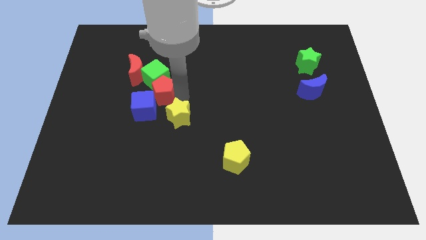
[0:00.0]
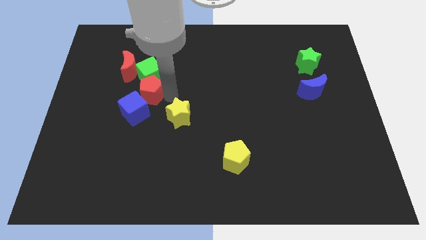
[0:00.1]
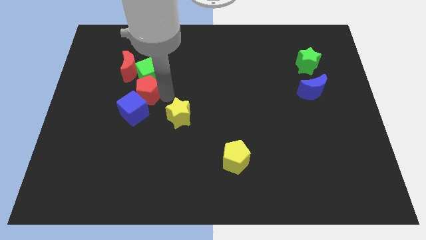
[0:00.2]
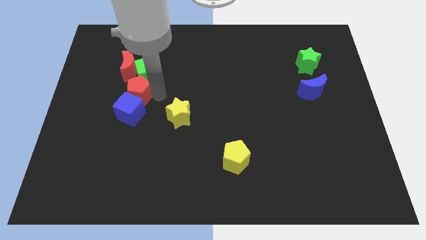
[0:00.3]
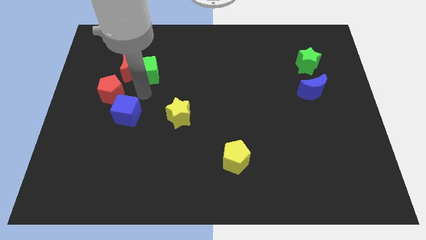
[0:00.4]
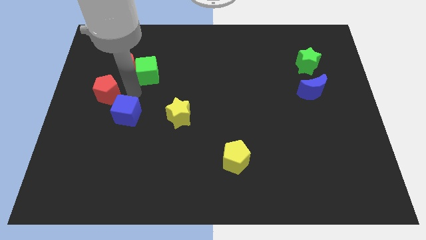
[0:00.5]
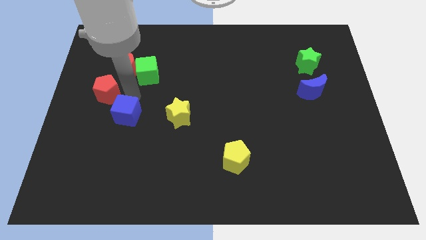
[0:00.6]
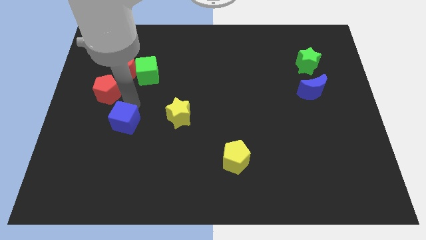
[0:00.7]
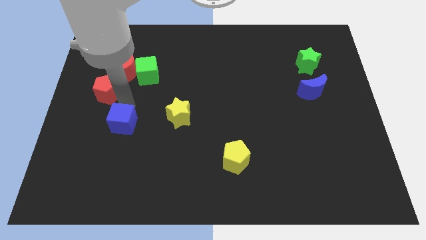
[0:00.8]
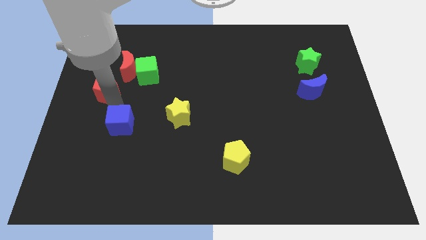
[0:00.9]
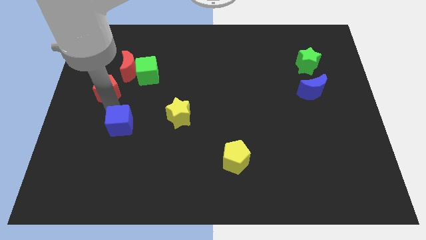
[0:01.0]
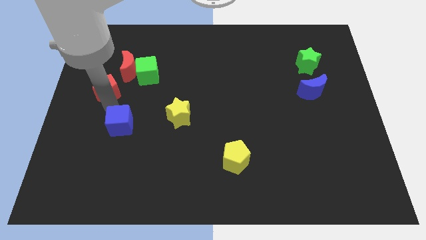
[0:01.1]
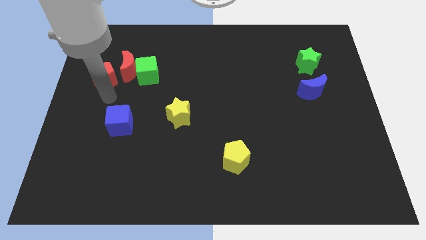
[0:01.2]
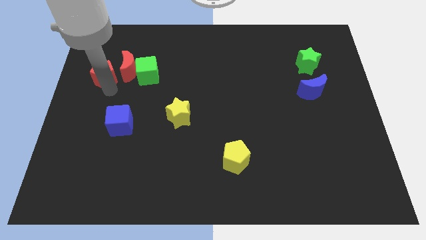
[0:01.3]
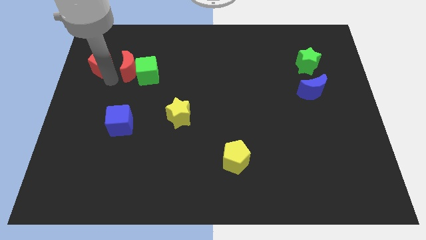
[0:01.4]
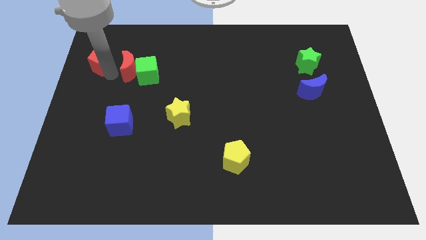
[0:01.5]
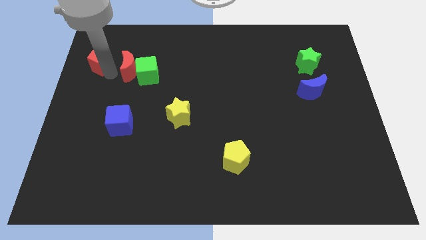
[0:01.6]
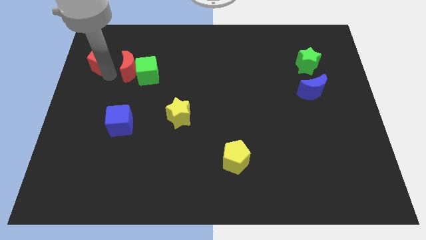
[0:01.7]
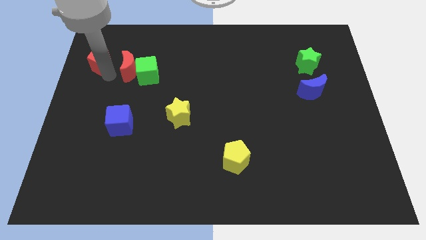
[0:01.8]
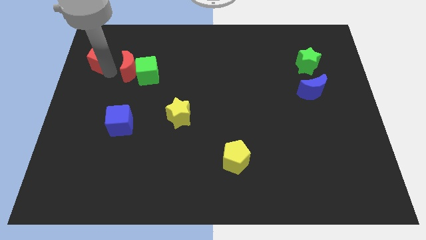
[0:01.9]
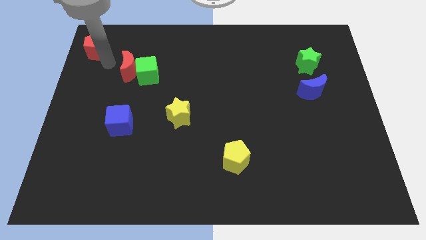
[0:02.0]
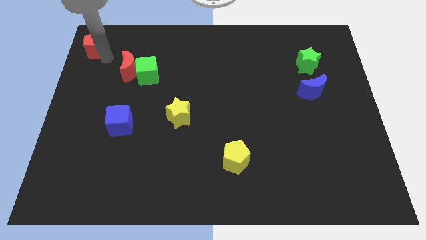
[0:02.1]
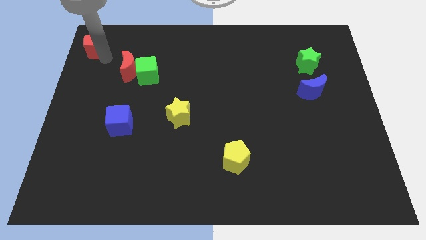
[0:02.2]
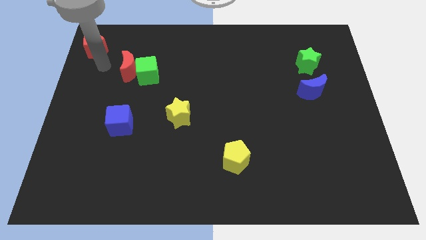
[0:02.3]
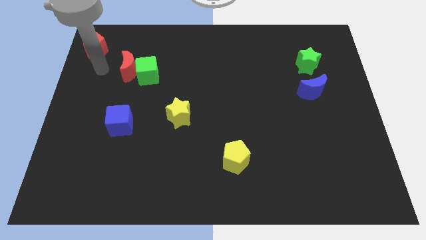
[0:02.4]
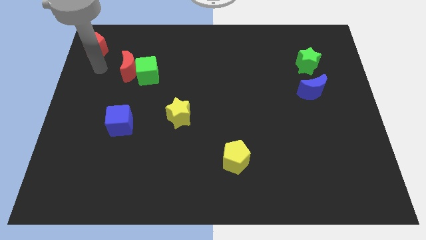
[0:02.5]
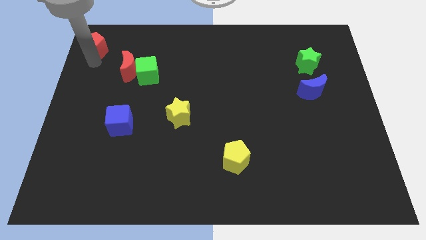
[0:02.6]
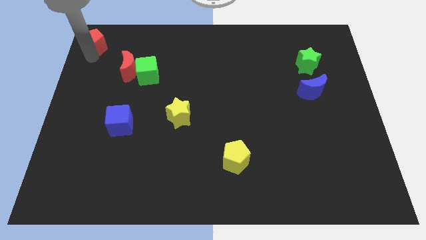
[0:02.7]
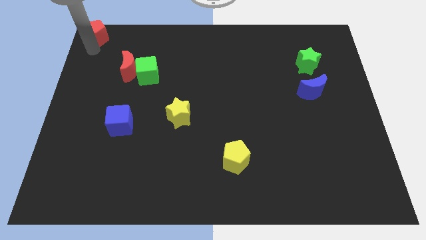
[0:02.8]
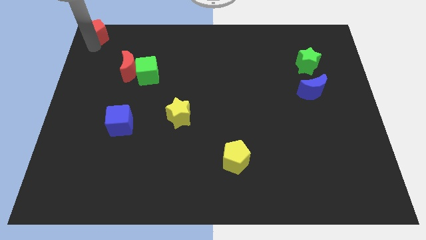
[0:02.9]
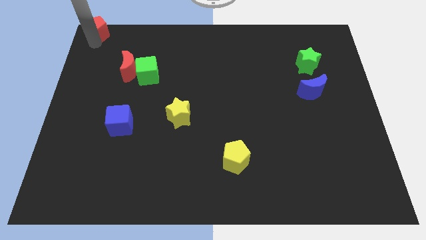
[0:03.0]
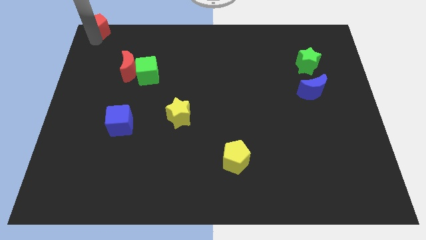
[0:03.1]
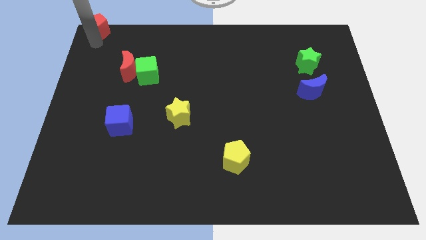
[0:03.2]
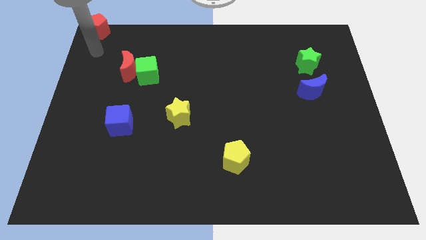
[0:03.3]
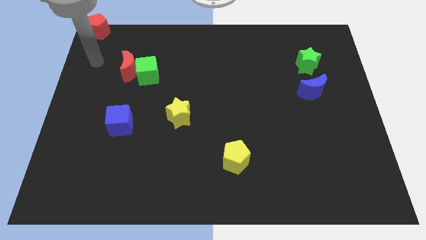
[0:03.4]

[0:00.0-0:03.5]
place red pentagon to top left corner

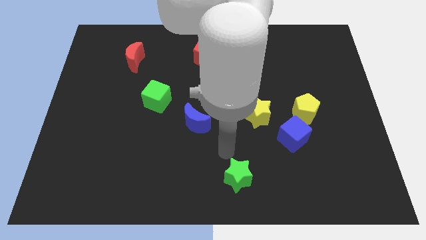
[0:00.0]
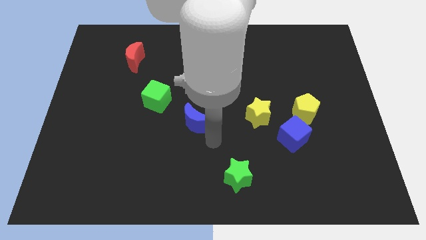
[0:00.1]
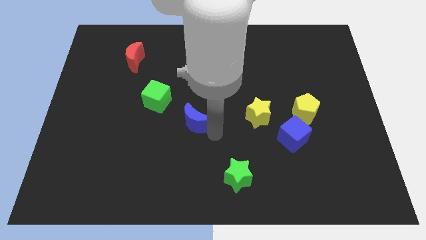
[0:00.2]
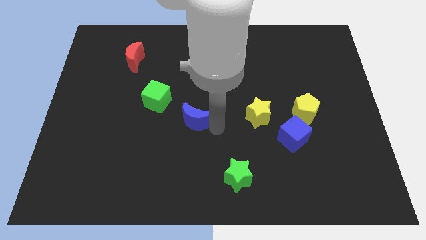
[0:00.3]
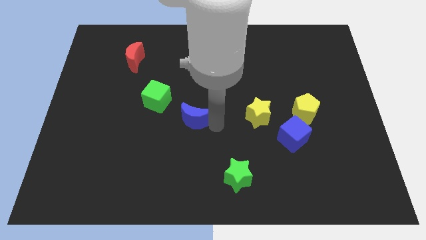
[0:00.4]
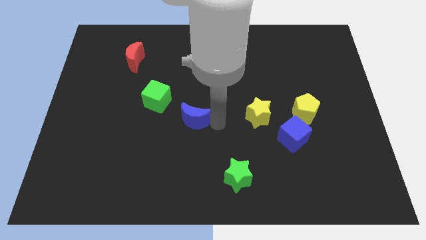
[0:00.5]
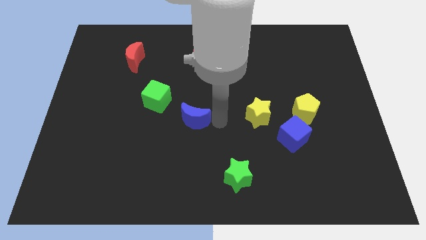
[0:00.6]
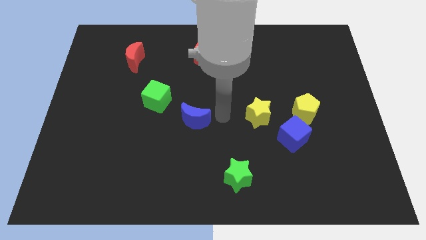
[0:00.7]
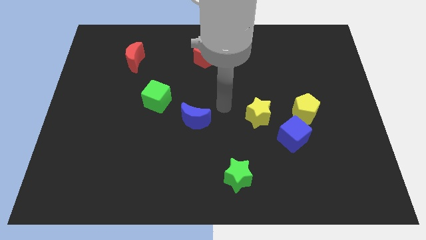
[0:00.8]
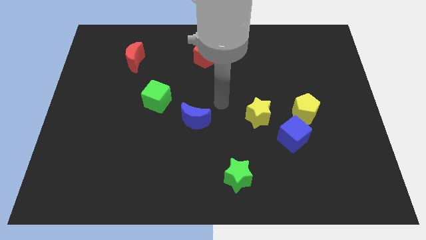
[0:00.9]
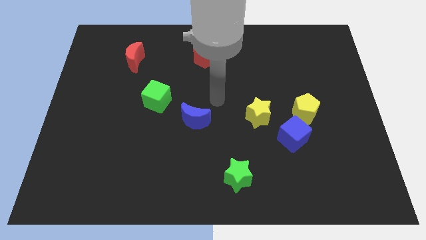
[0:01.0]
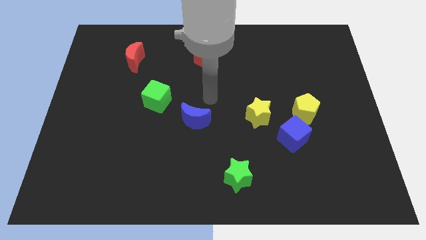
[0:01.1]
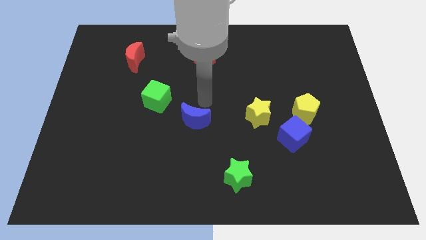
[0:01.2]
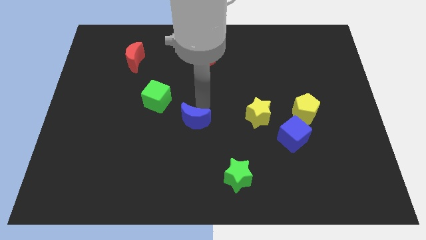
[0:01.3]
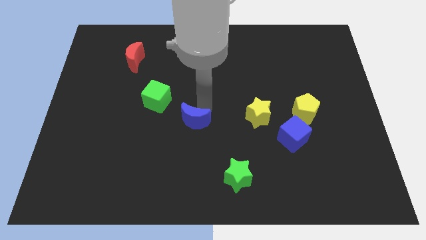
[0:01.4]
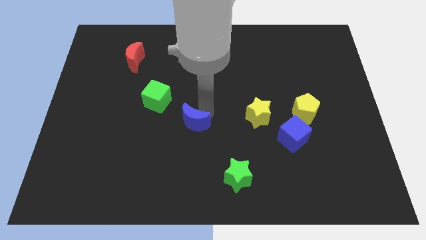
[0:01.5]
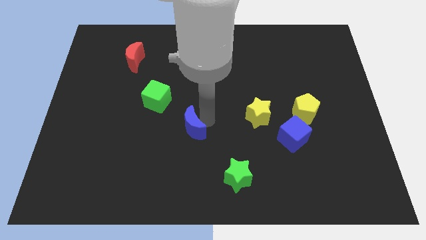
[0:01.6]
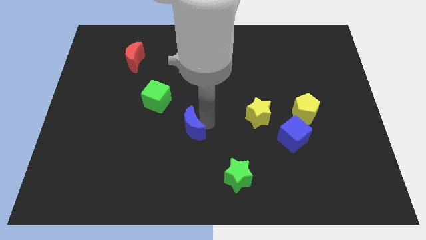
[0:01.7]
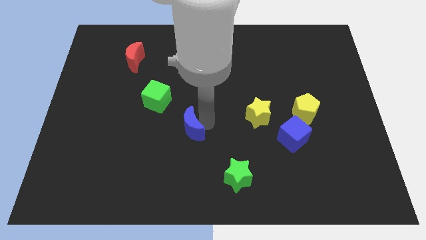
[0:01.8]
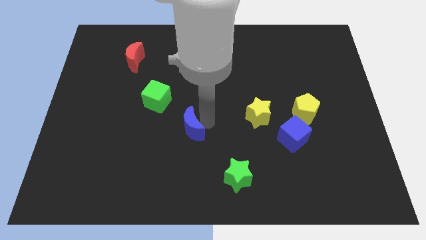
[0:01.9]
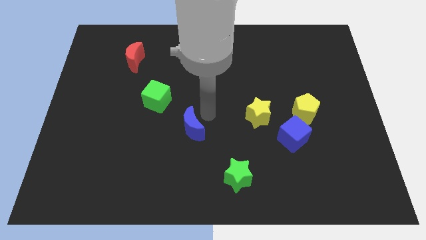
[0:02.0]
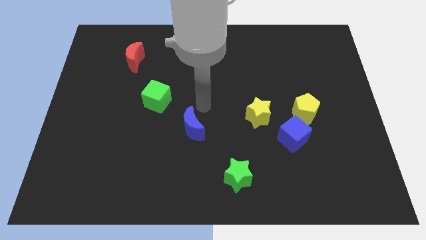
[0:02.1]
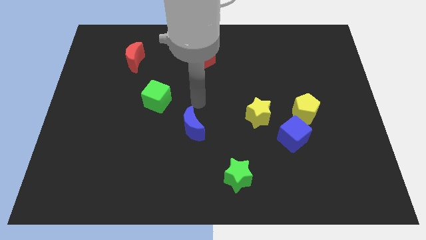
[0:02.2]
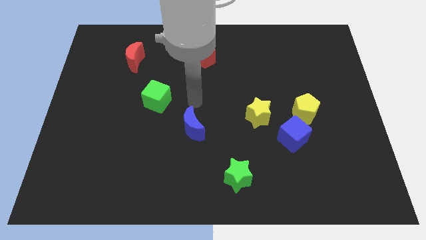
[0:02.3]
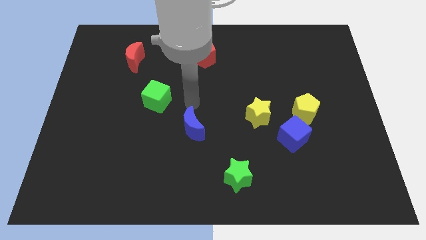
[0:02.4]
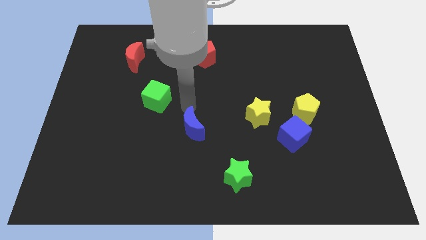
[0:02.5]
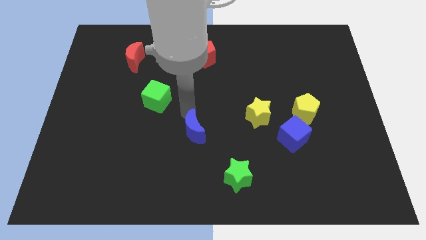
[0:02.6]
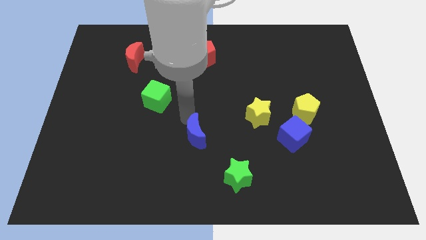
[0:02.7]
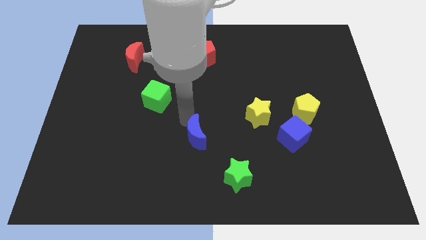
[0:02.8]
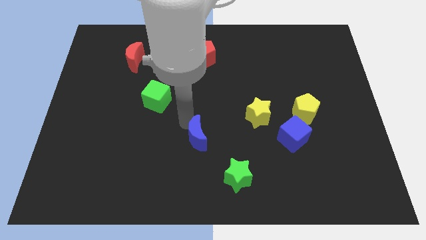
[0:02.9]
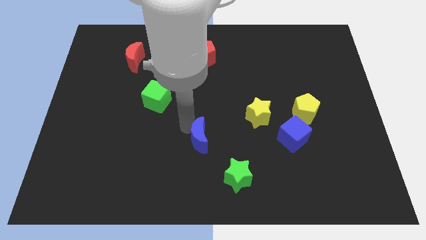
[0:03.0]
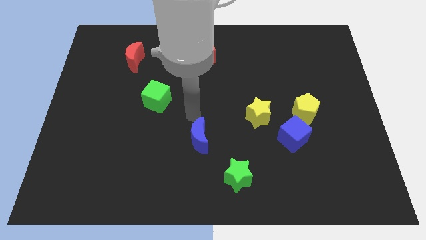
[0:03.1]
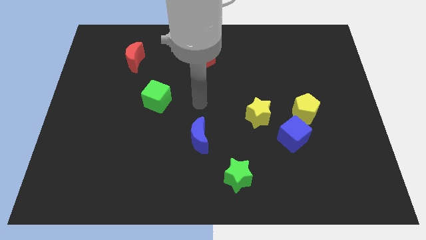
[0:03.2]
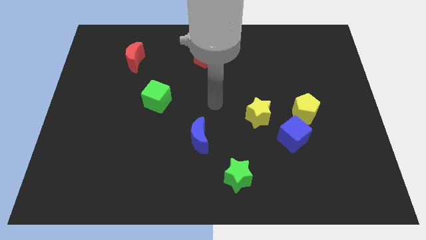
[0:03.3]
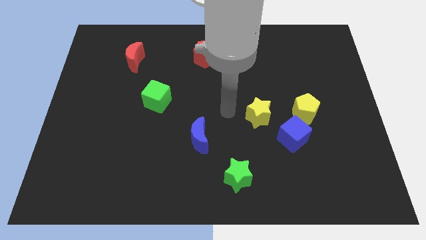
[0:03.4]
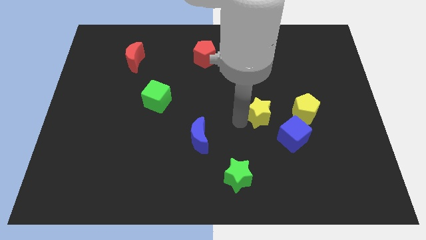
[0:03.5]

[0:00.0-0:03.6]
move the blue crescent towards the green star

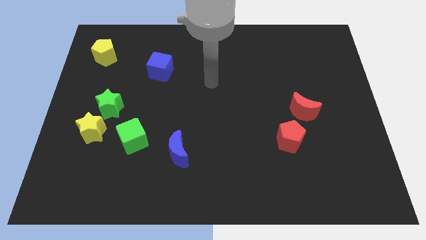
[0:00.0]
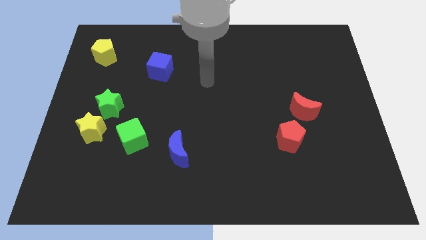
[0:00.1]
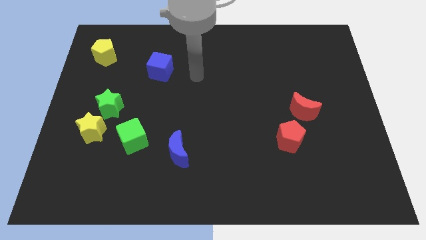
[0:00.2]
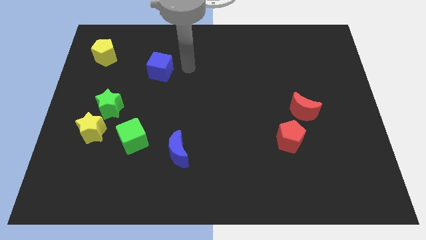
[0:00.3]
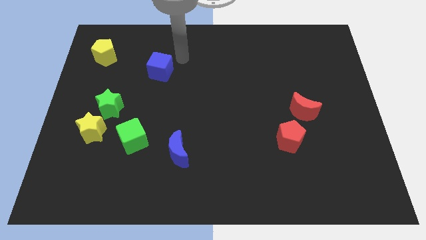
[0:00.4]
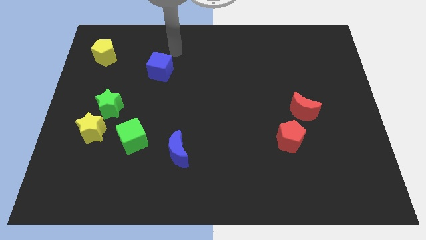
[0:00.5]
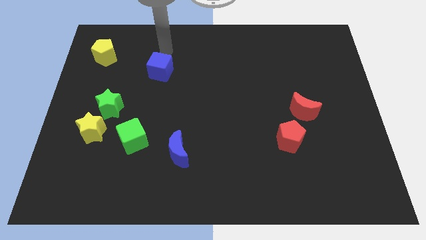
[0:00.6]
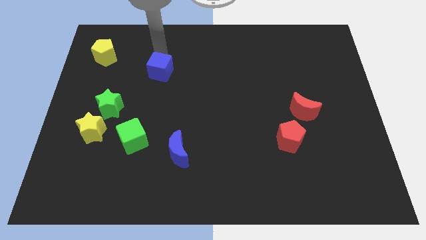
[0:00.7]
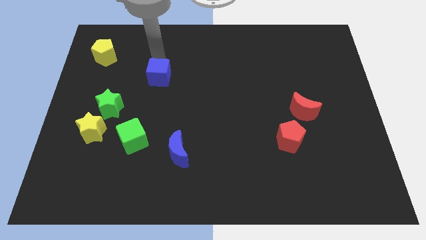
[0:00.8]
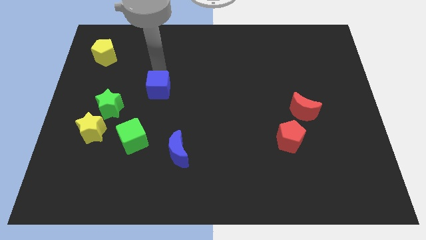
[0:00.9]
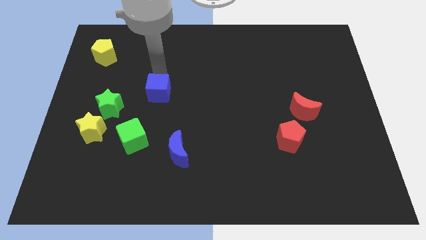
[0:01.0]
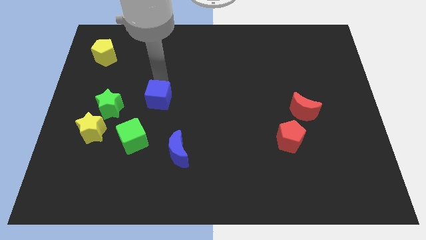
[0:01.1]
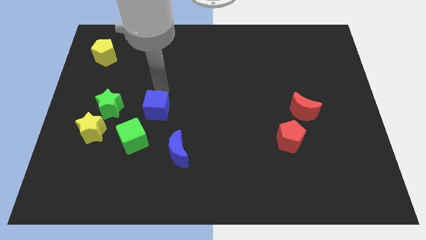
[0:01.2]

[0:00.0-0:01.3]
push the blue cube closer to the green cube

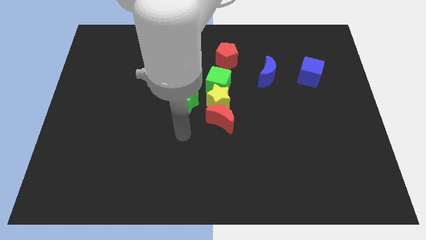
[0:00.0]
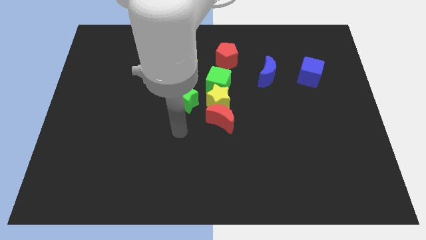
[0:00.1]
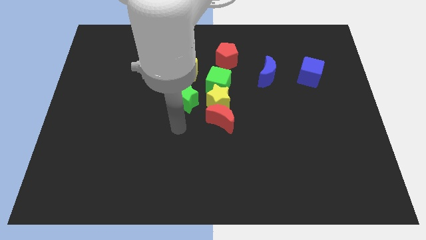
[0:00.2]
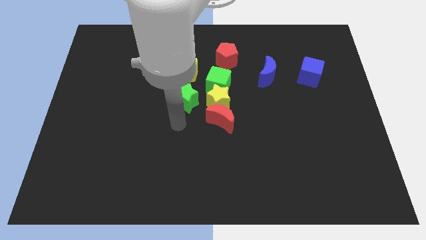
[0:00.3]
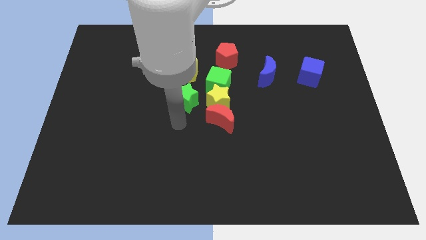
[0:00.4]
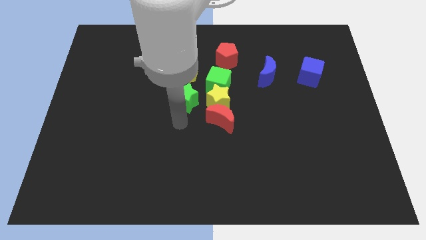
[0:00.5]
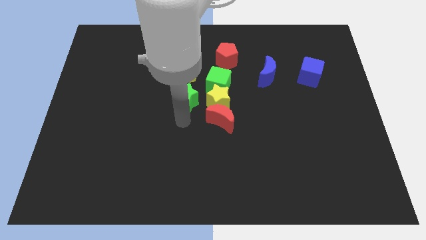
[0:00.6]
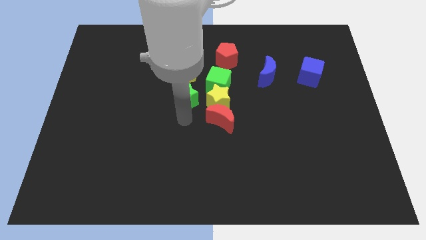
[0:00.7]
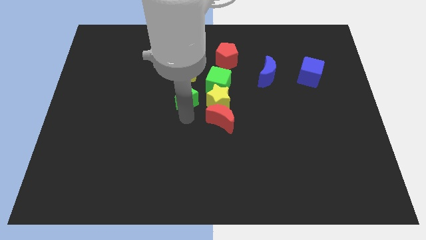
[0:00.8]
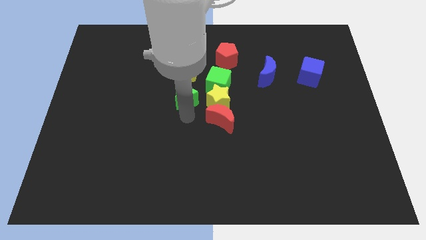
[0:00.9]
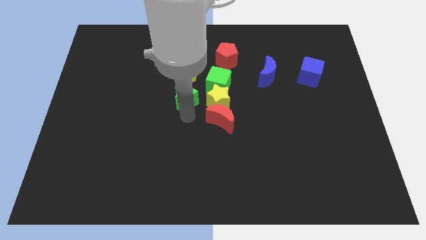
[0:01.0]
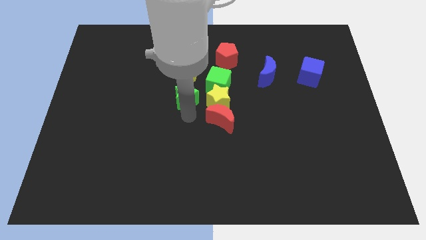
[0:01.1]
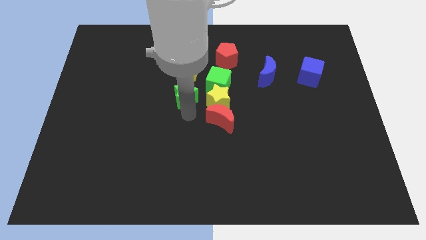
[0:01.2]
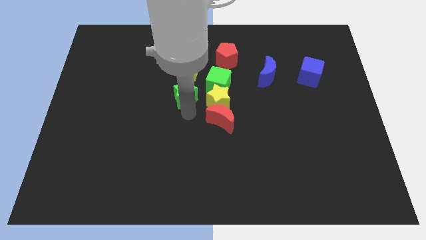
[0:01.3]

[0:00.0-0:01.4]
touch the bottom of the green star
